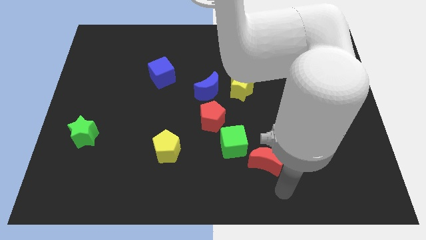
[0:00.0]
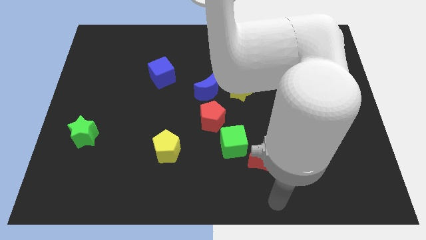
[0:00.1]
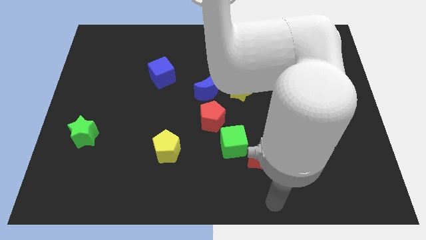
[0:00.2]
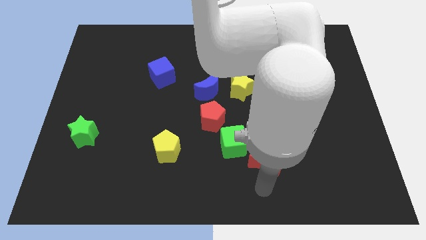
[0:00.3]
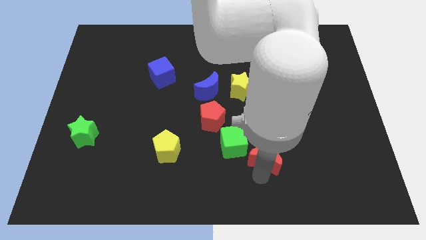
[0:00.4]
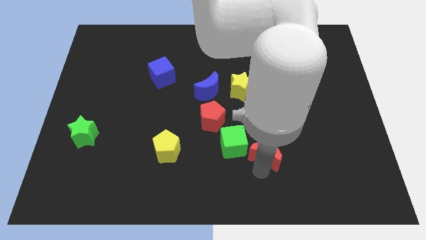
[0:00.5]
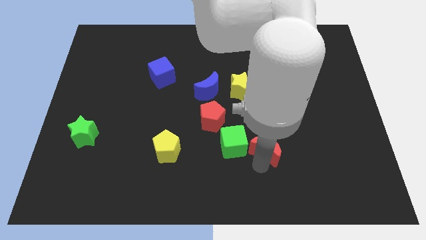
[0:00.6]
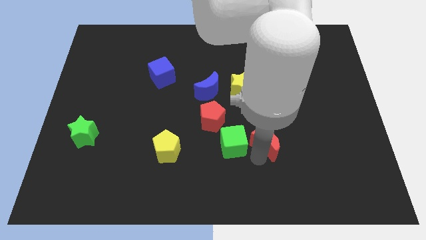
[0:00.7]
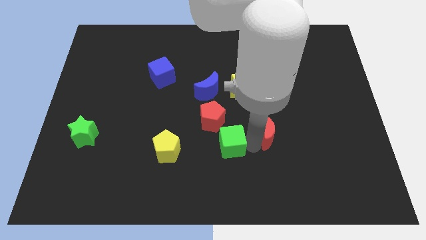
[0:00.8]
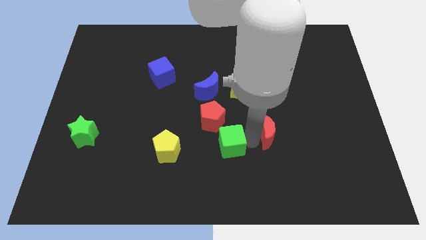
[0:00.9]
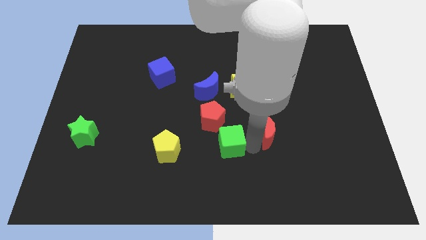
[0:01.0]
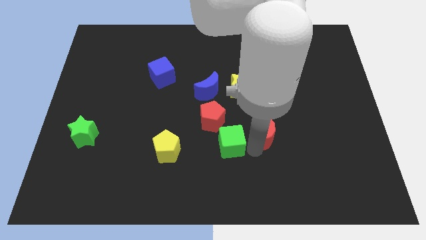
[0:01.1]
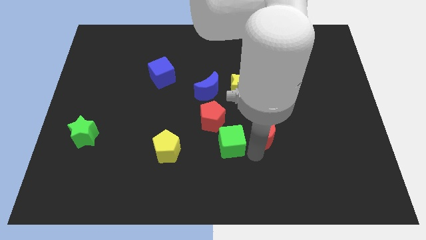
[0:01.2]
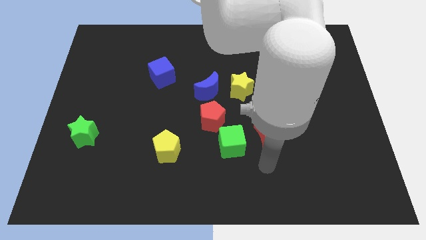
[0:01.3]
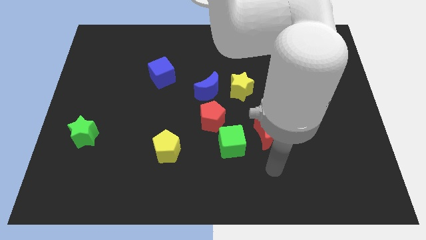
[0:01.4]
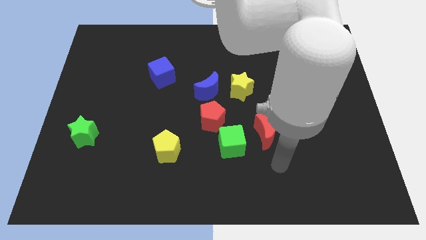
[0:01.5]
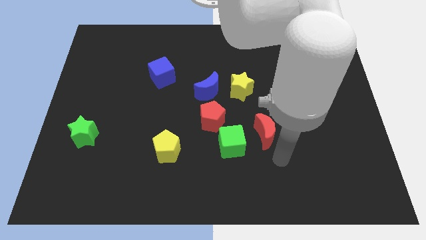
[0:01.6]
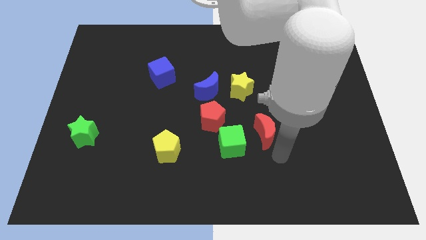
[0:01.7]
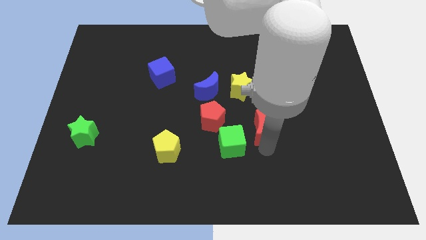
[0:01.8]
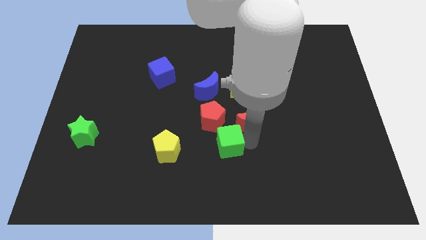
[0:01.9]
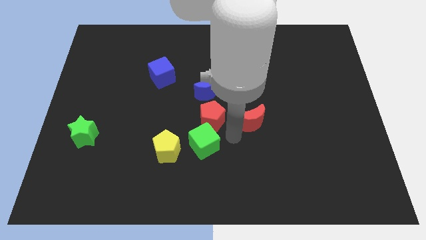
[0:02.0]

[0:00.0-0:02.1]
separate green cube and red moon

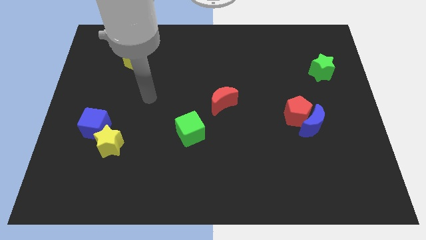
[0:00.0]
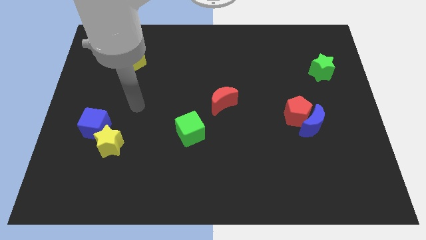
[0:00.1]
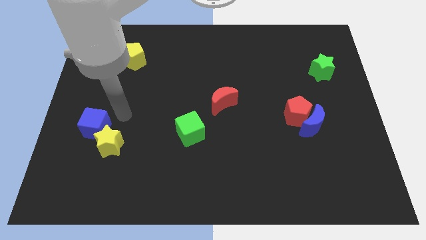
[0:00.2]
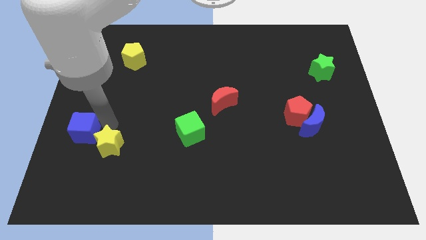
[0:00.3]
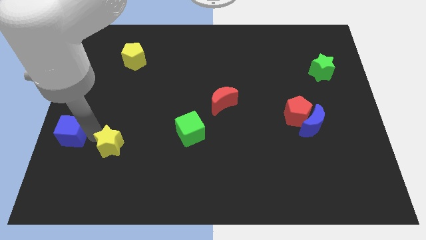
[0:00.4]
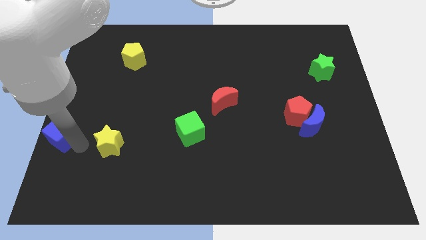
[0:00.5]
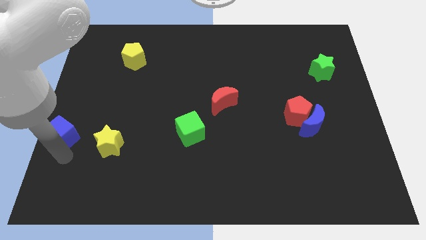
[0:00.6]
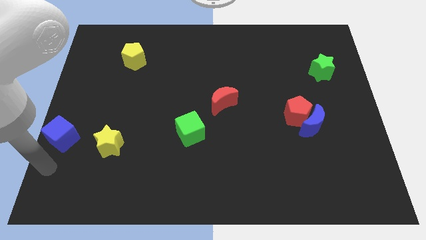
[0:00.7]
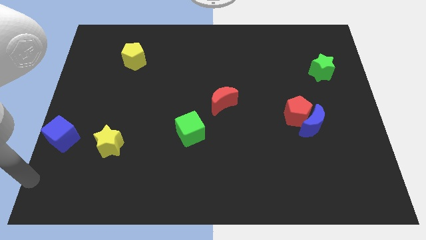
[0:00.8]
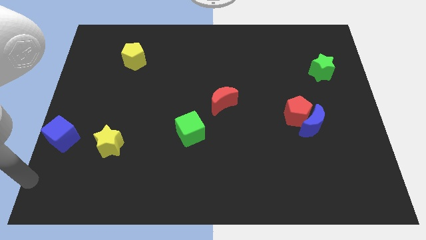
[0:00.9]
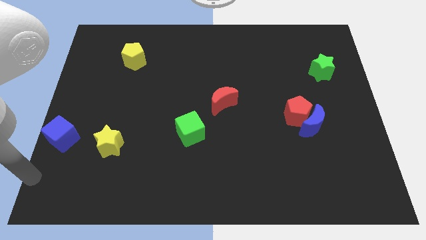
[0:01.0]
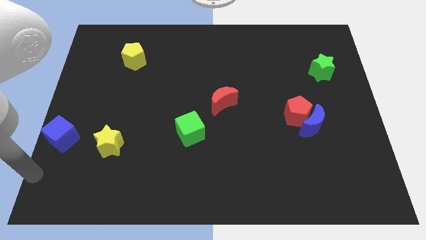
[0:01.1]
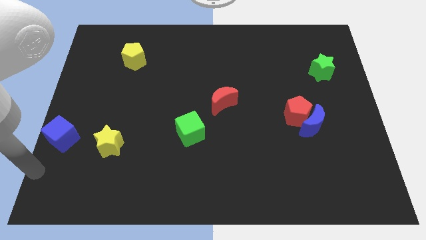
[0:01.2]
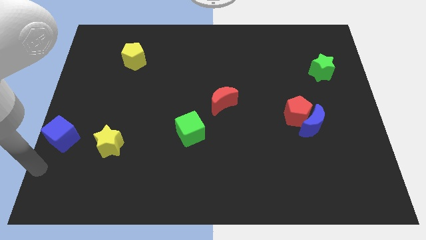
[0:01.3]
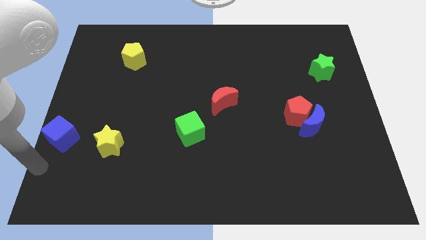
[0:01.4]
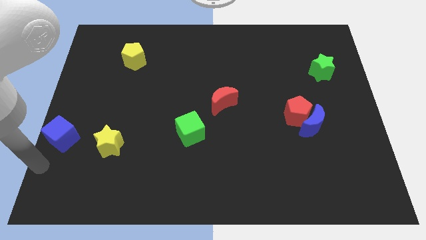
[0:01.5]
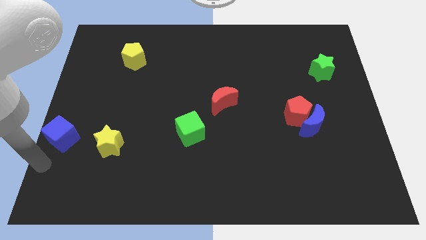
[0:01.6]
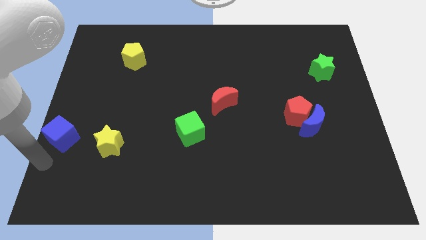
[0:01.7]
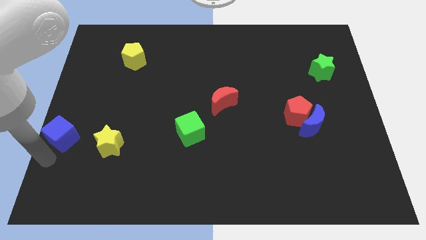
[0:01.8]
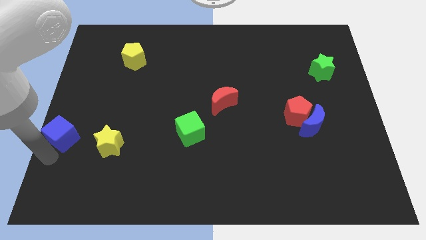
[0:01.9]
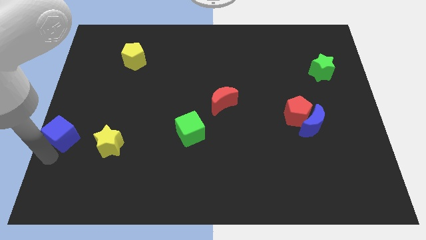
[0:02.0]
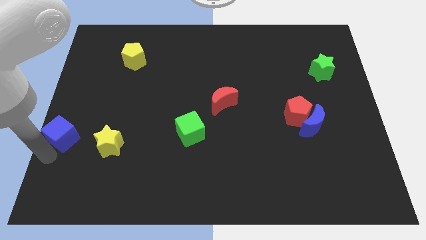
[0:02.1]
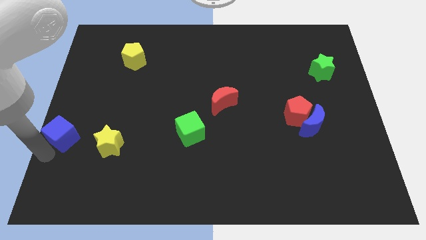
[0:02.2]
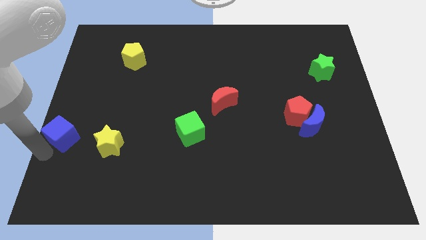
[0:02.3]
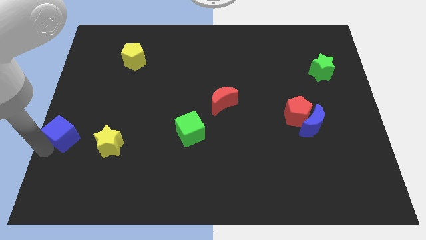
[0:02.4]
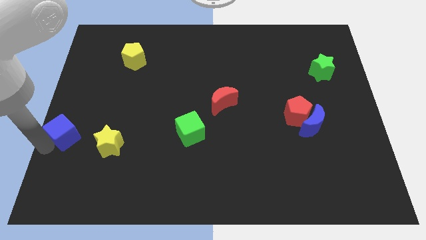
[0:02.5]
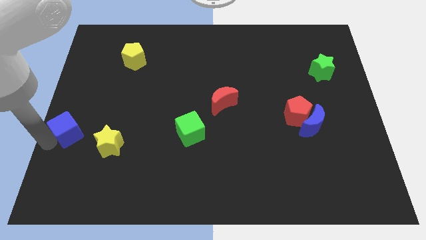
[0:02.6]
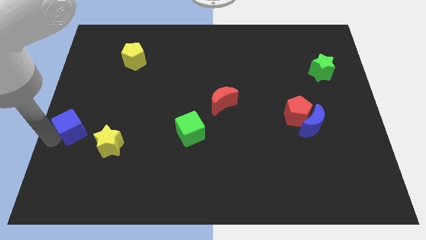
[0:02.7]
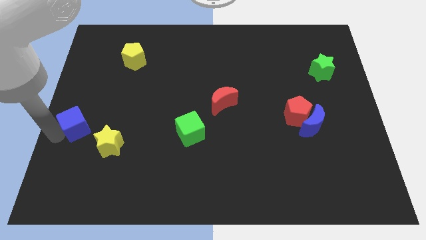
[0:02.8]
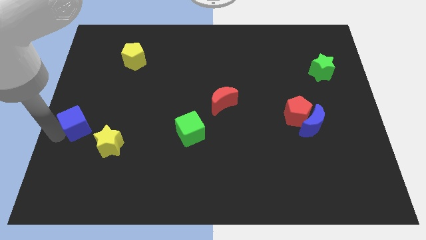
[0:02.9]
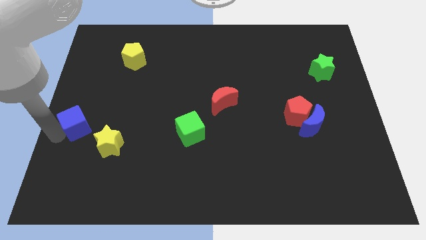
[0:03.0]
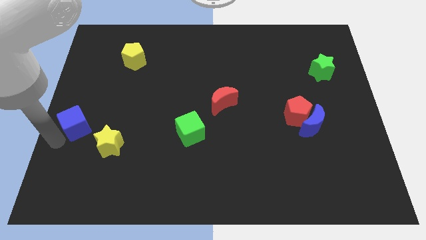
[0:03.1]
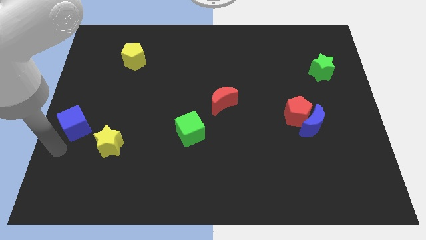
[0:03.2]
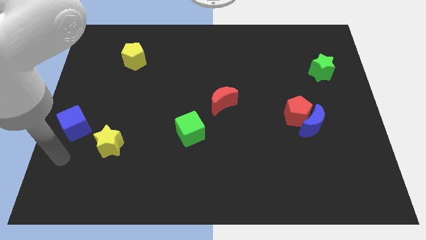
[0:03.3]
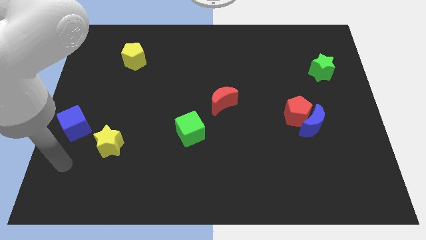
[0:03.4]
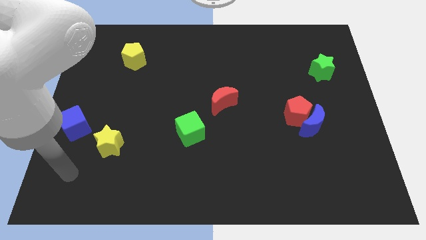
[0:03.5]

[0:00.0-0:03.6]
push the blue cube to the top left of the yellow star

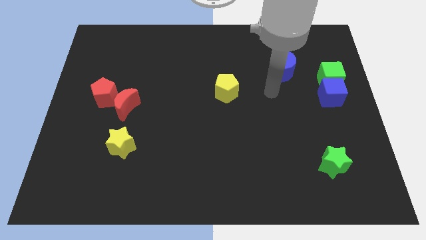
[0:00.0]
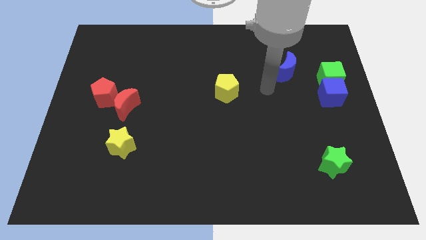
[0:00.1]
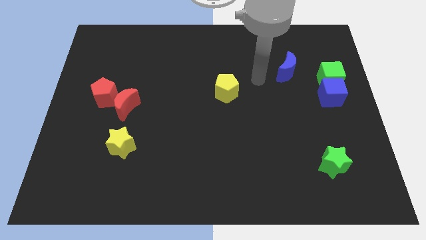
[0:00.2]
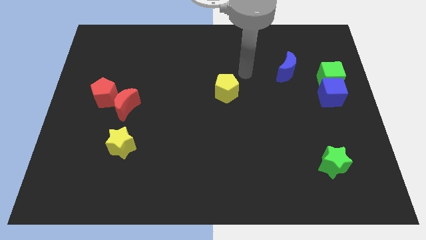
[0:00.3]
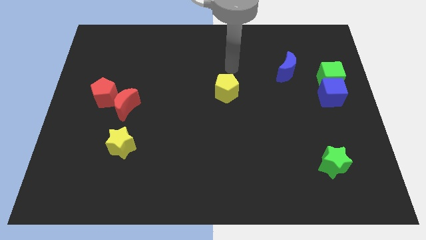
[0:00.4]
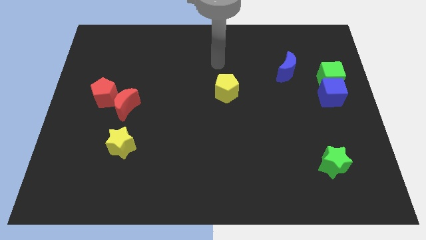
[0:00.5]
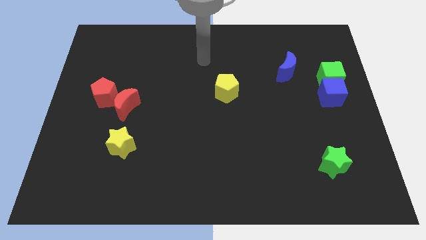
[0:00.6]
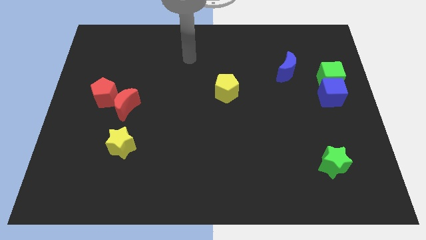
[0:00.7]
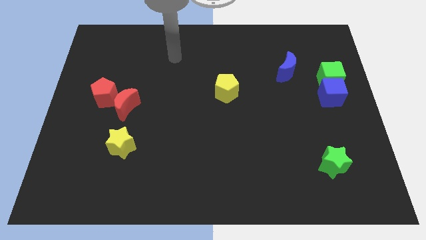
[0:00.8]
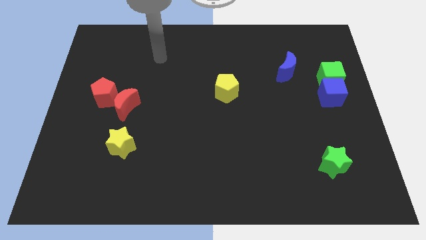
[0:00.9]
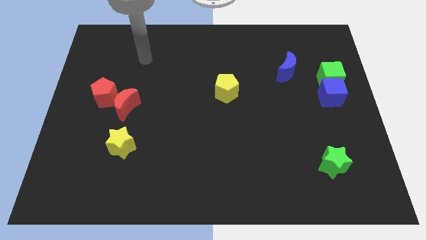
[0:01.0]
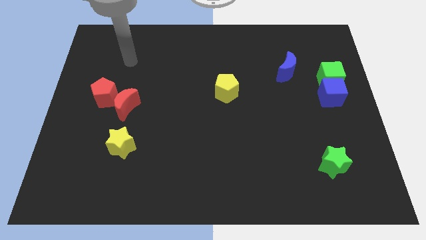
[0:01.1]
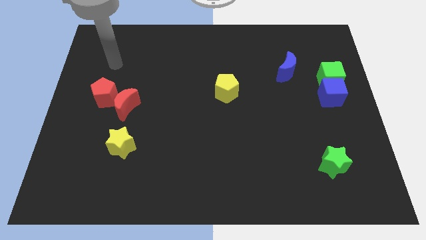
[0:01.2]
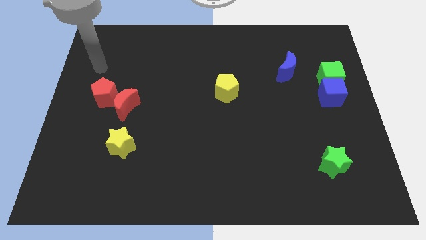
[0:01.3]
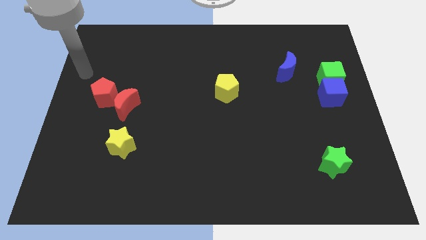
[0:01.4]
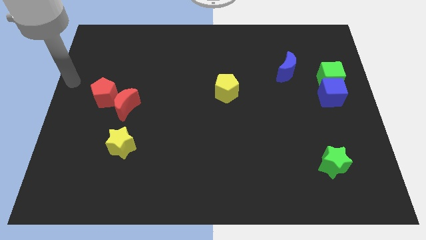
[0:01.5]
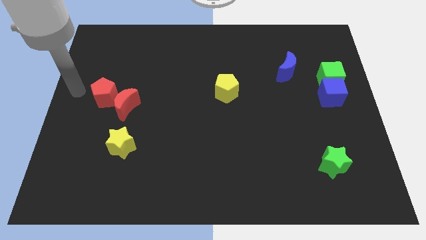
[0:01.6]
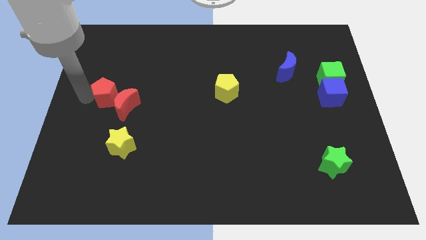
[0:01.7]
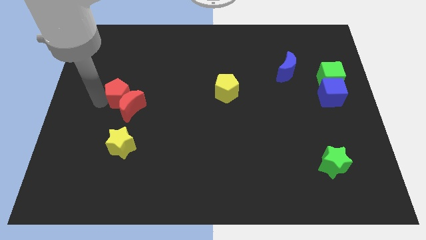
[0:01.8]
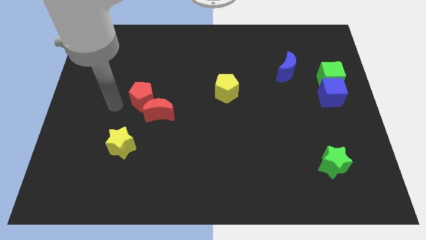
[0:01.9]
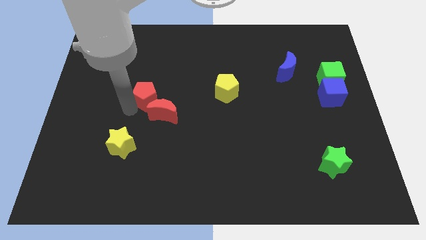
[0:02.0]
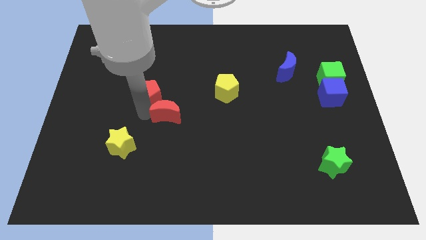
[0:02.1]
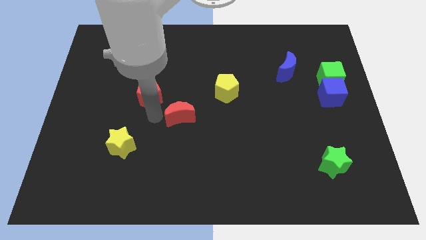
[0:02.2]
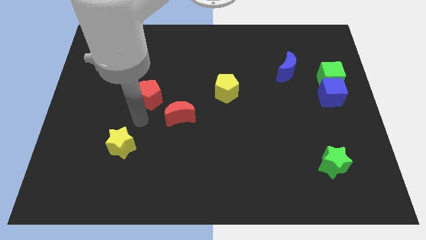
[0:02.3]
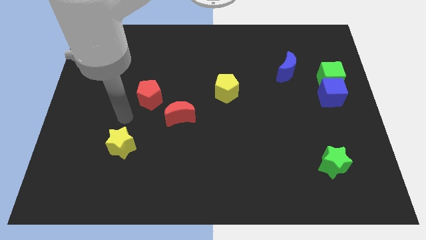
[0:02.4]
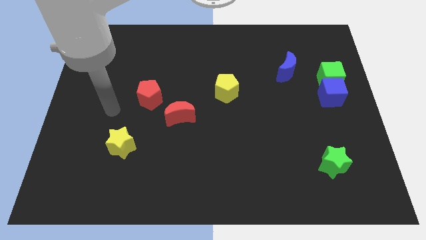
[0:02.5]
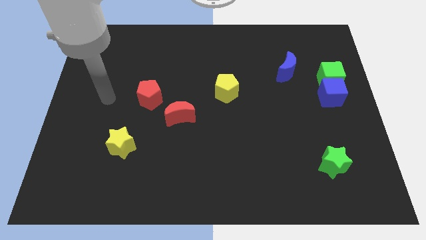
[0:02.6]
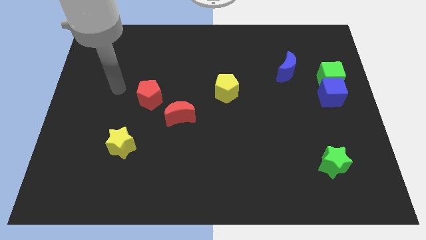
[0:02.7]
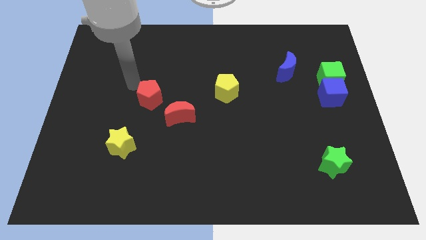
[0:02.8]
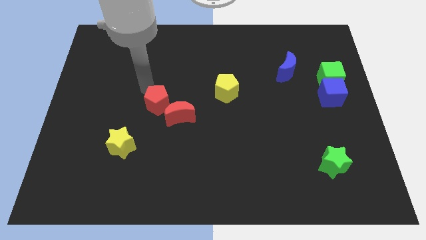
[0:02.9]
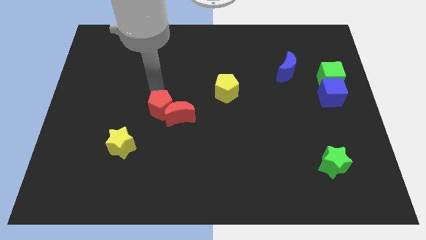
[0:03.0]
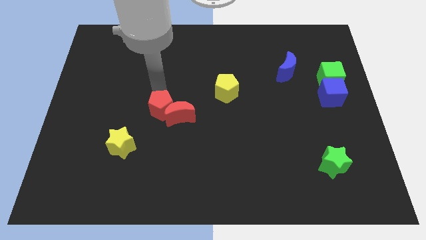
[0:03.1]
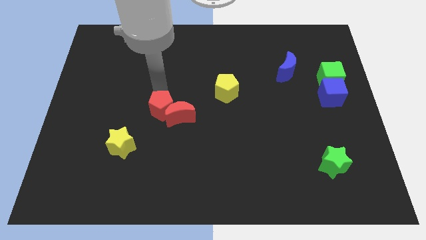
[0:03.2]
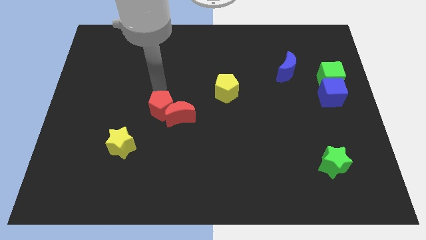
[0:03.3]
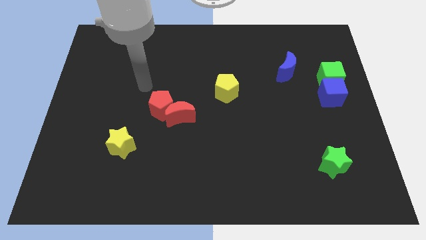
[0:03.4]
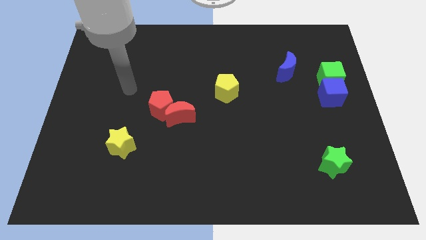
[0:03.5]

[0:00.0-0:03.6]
move your arm close to the red pentagon
